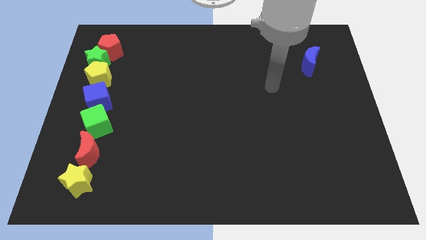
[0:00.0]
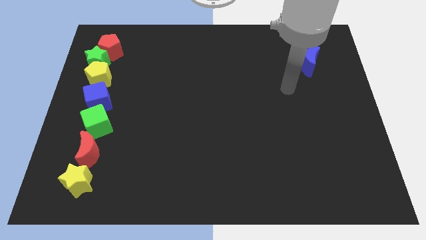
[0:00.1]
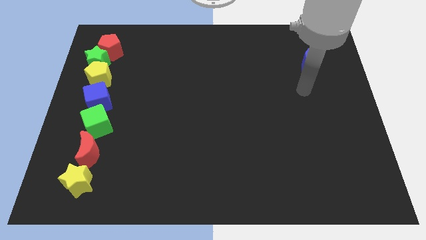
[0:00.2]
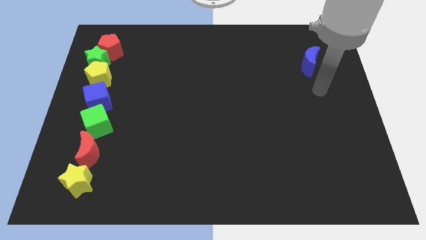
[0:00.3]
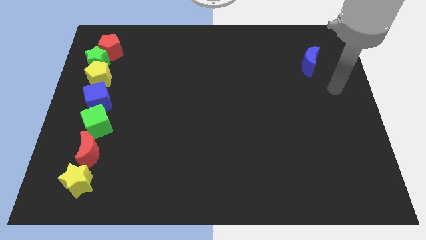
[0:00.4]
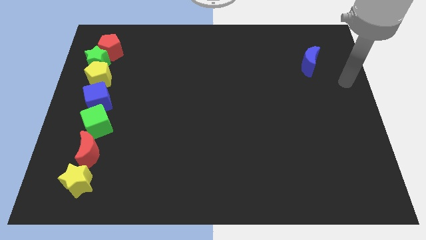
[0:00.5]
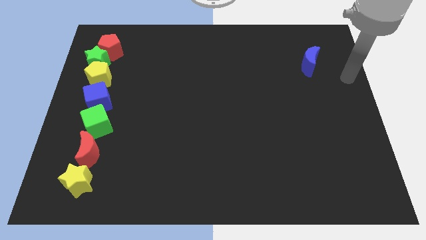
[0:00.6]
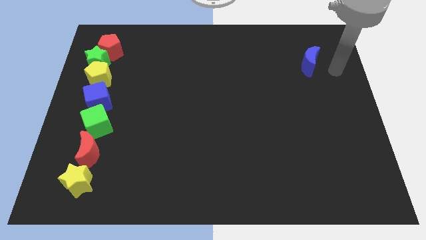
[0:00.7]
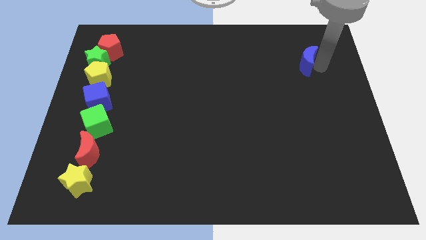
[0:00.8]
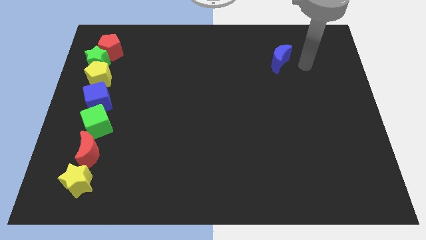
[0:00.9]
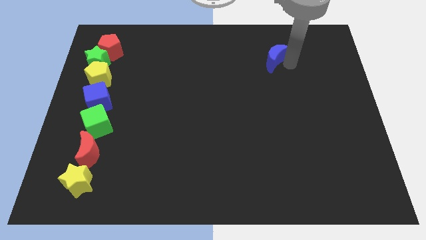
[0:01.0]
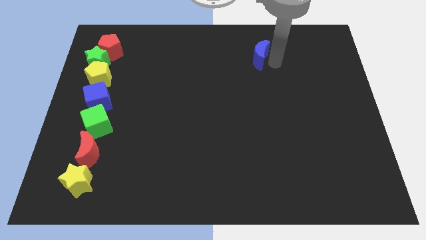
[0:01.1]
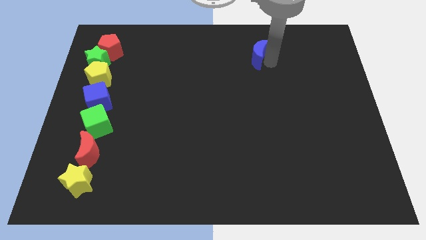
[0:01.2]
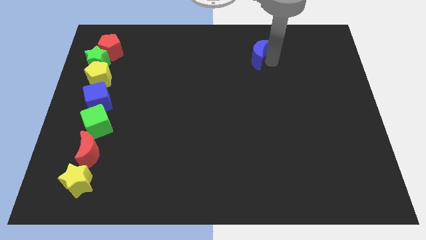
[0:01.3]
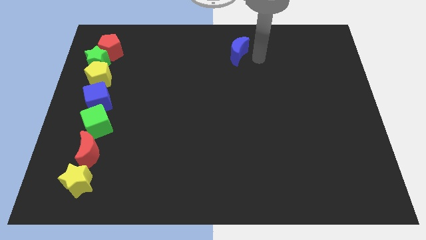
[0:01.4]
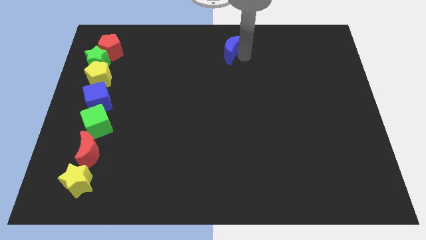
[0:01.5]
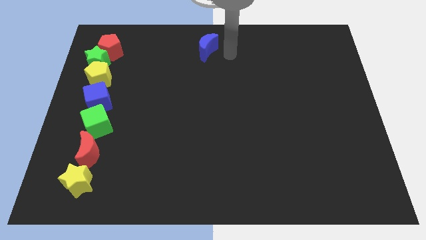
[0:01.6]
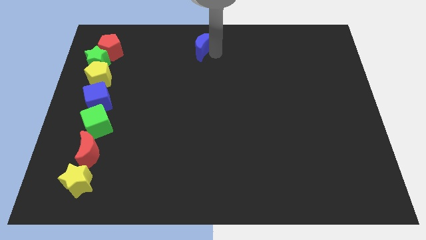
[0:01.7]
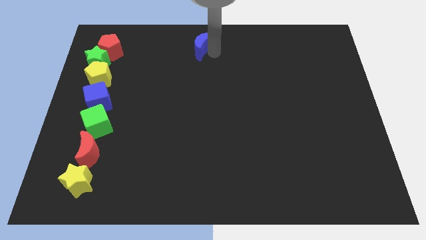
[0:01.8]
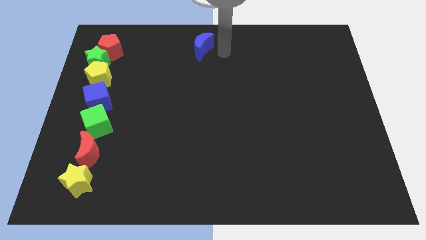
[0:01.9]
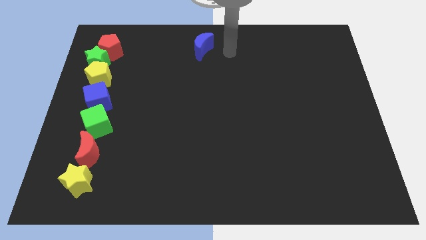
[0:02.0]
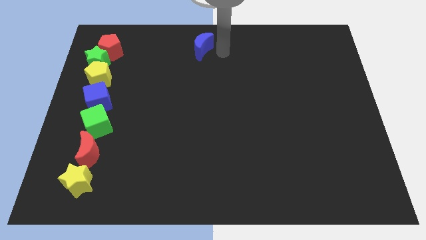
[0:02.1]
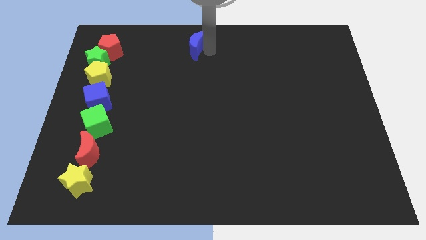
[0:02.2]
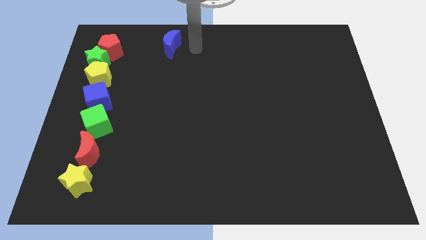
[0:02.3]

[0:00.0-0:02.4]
slide the blue moon horizontal to the red pentagon

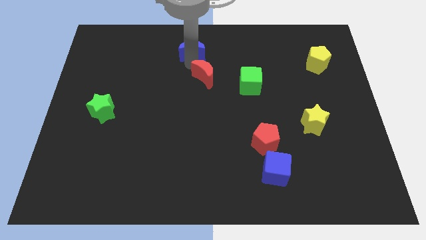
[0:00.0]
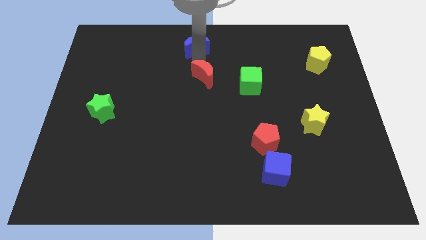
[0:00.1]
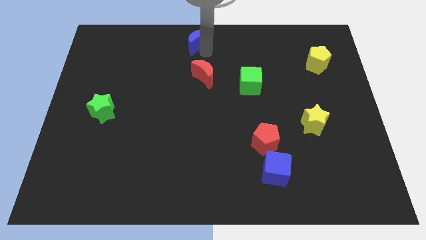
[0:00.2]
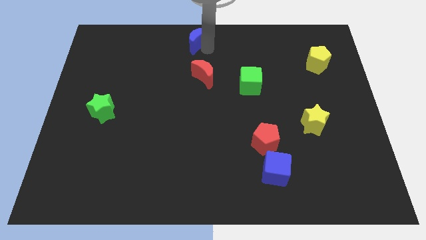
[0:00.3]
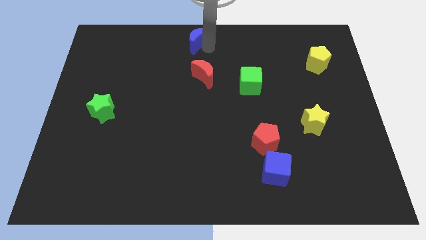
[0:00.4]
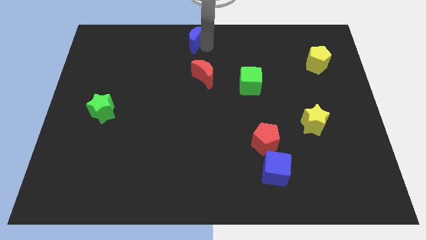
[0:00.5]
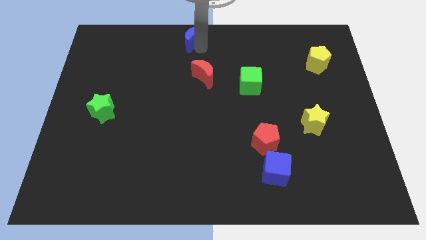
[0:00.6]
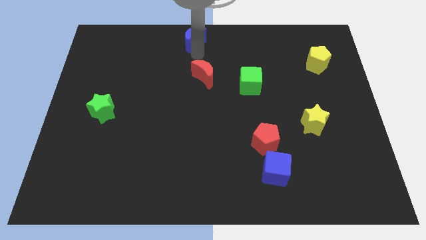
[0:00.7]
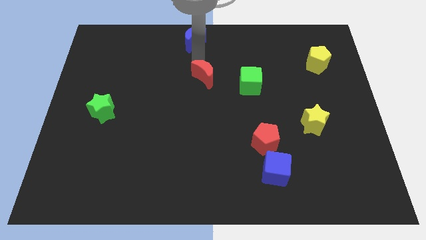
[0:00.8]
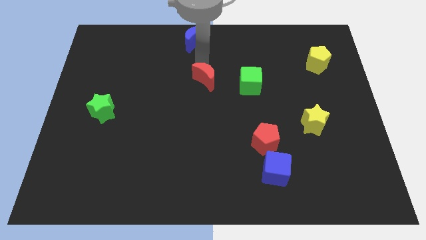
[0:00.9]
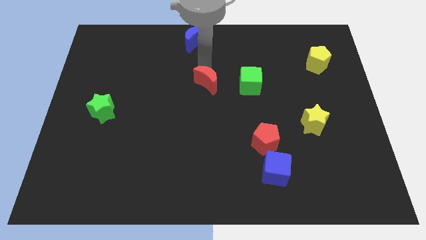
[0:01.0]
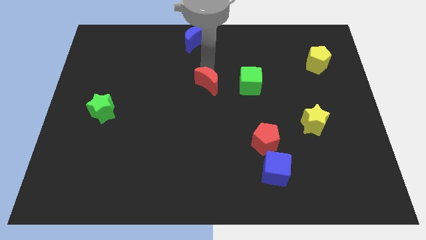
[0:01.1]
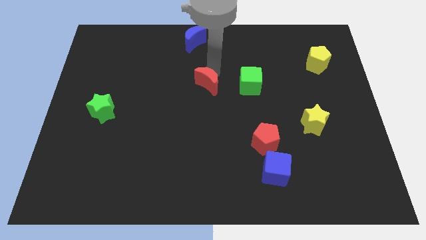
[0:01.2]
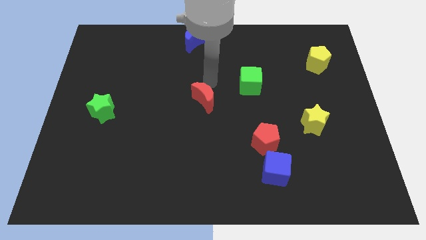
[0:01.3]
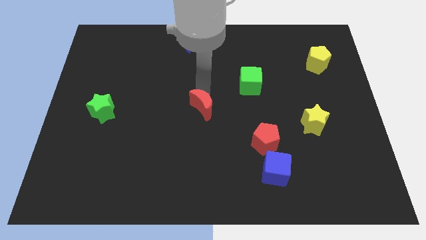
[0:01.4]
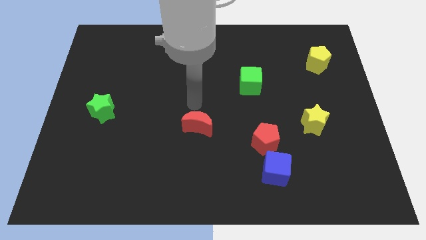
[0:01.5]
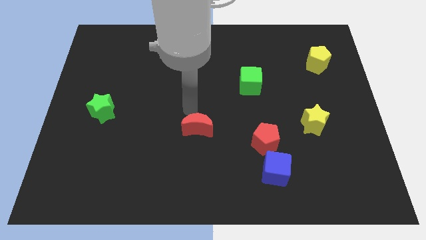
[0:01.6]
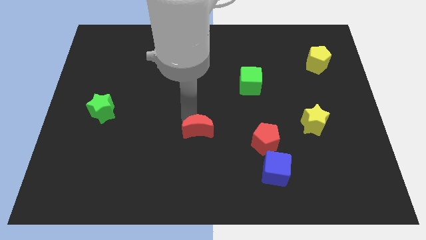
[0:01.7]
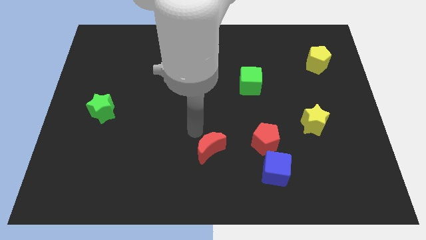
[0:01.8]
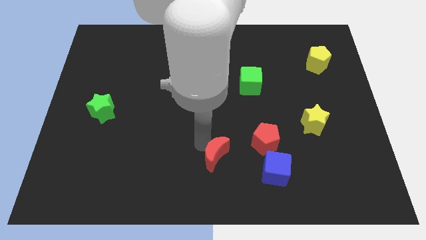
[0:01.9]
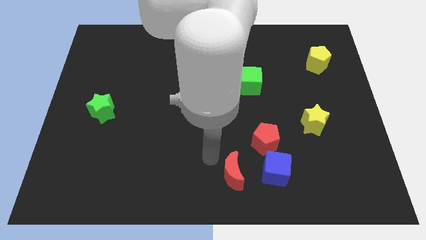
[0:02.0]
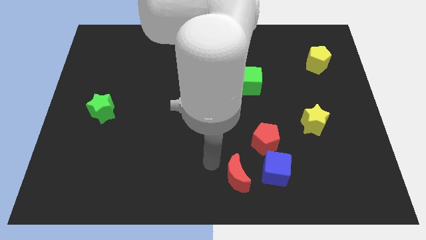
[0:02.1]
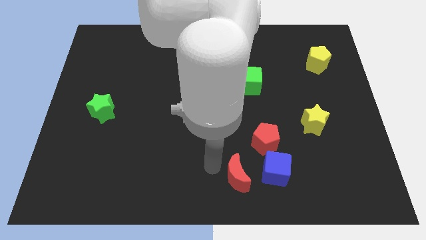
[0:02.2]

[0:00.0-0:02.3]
push red crescent opposite to blue cube

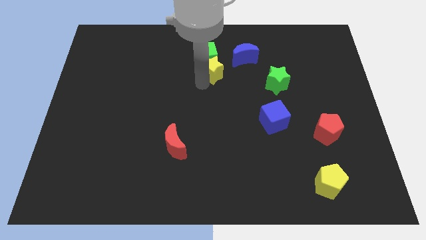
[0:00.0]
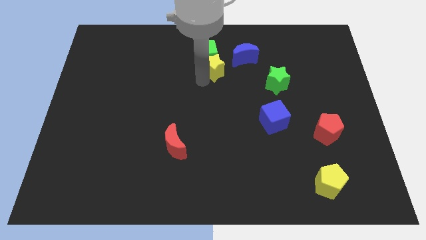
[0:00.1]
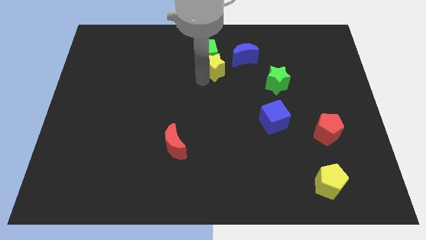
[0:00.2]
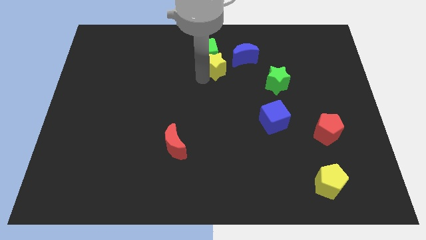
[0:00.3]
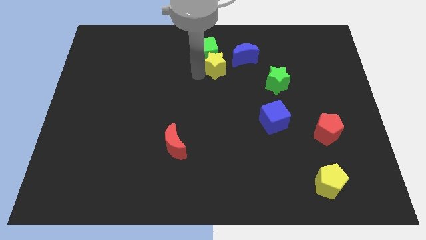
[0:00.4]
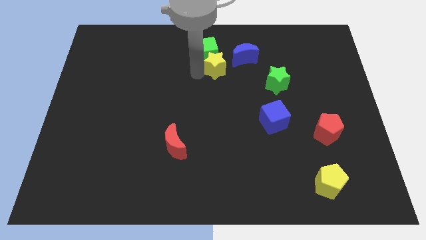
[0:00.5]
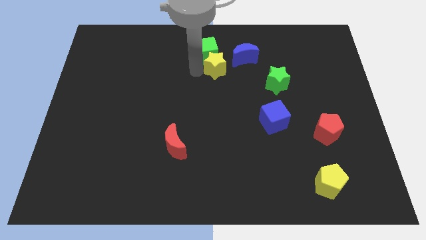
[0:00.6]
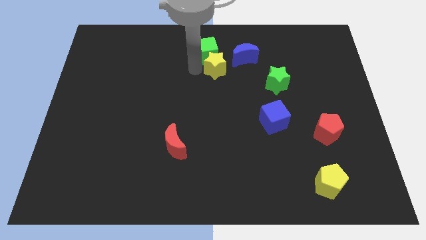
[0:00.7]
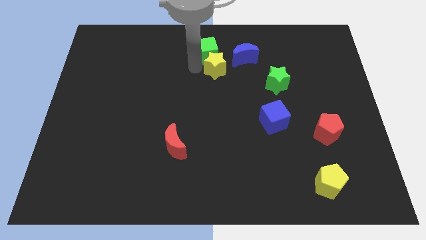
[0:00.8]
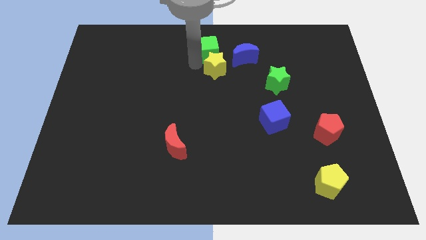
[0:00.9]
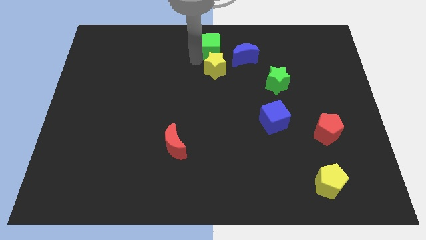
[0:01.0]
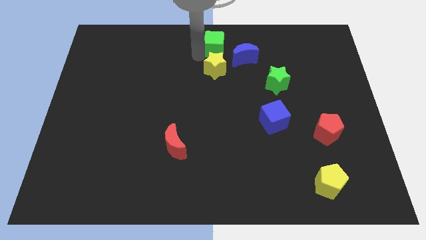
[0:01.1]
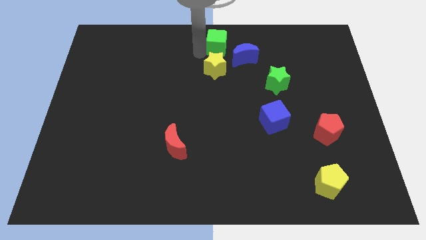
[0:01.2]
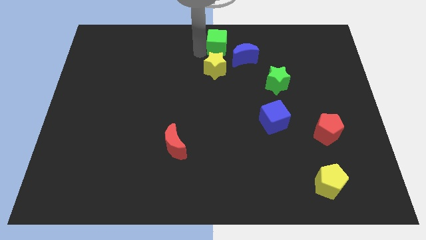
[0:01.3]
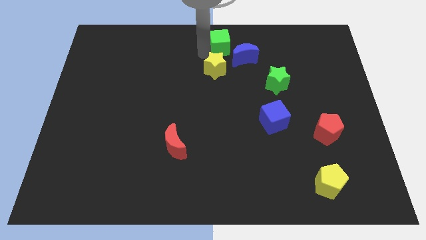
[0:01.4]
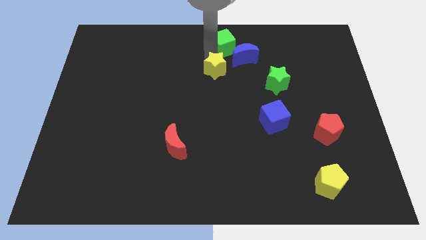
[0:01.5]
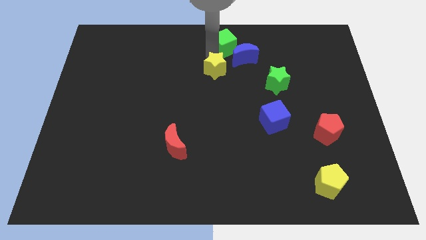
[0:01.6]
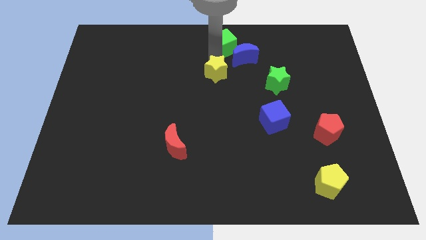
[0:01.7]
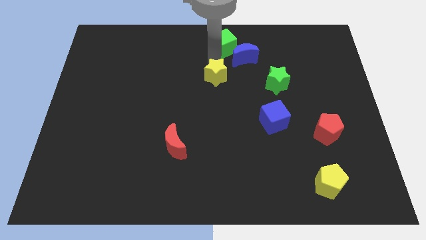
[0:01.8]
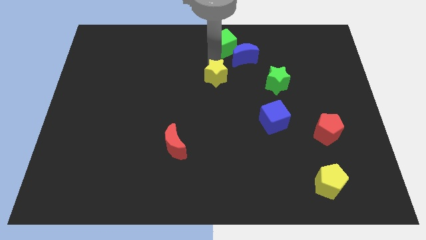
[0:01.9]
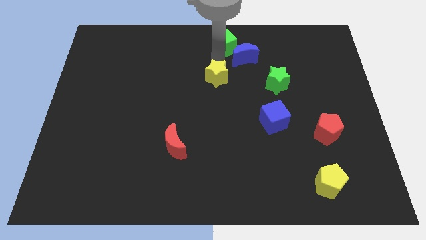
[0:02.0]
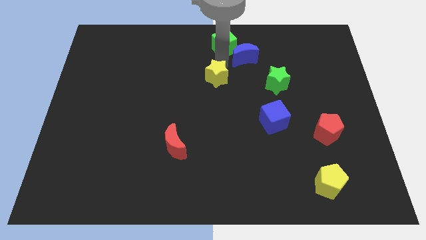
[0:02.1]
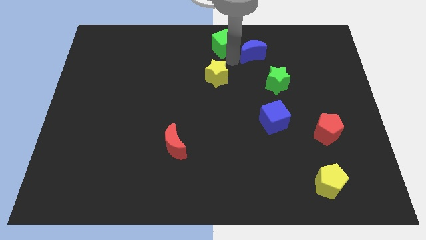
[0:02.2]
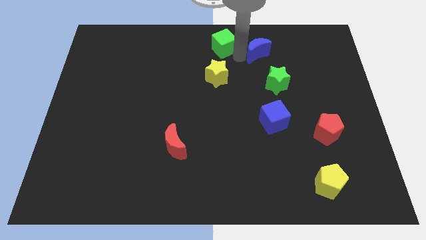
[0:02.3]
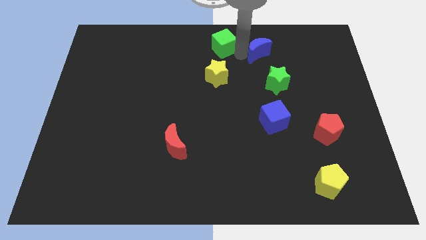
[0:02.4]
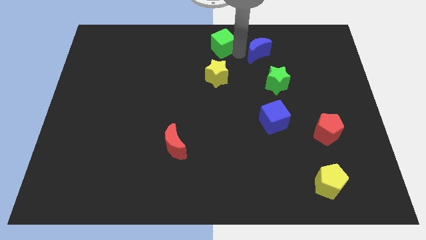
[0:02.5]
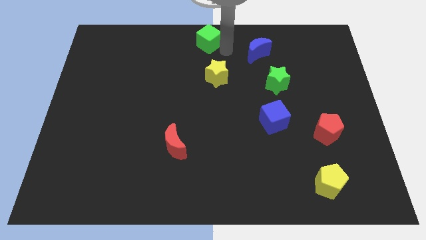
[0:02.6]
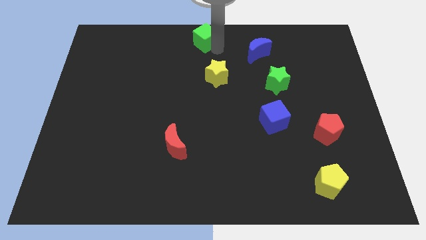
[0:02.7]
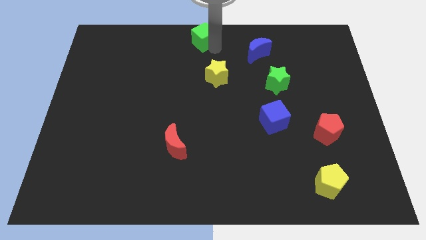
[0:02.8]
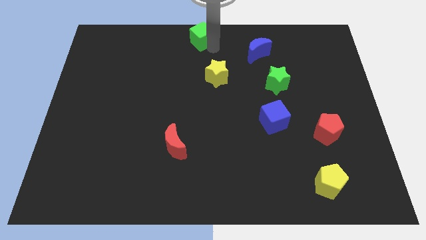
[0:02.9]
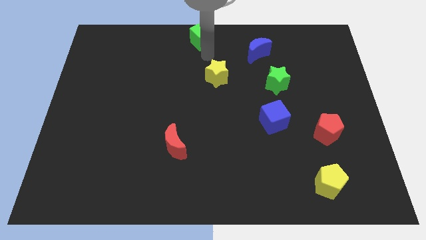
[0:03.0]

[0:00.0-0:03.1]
push the green cube yellow star and blue moon in different directions

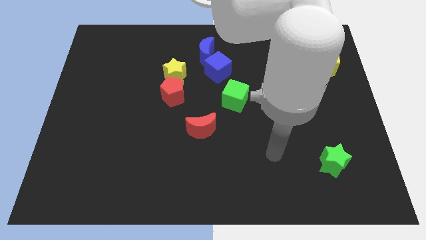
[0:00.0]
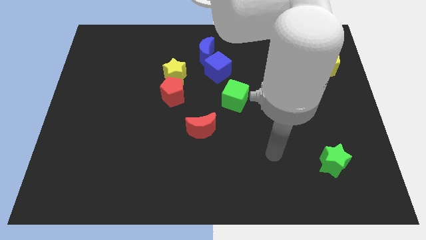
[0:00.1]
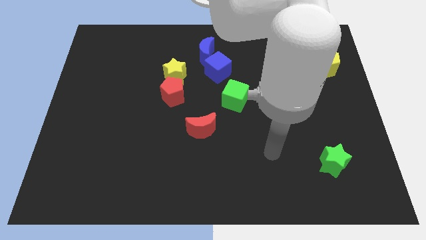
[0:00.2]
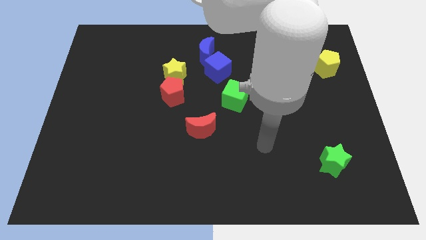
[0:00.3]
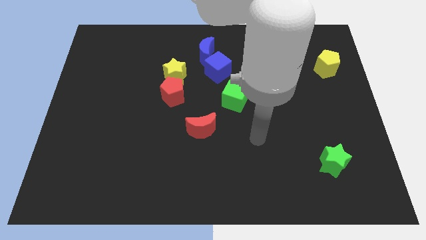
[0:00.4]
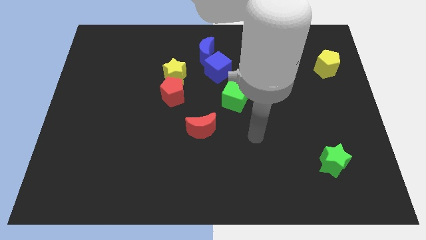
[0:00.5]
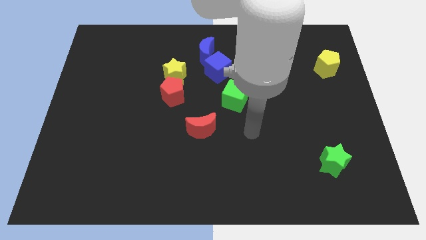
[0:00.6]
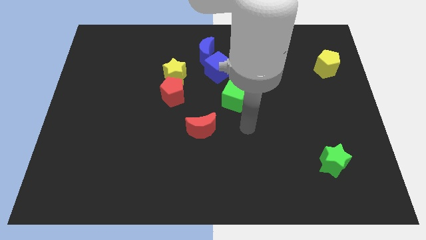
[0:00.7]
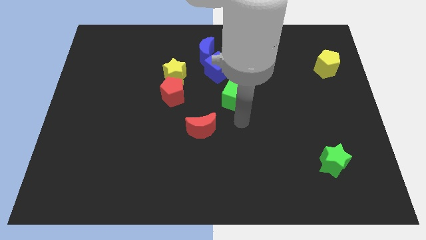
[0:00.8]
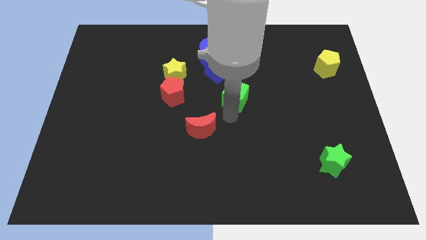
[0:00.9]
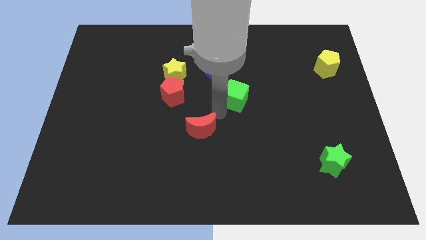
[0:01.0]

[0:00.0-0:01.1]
place your hand in between green cube and red moon
